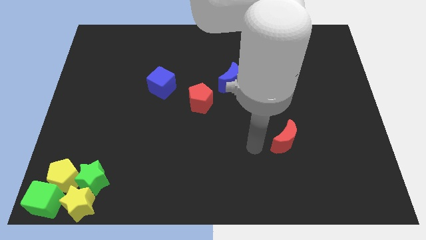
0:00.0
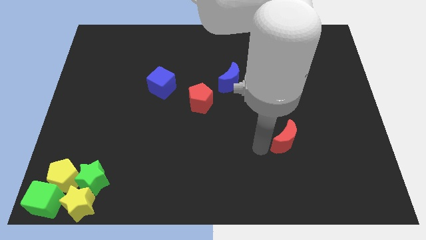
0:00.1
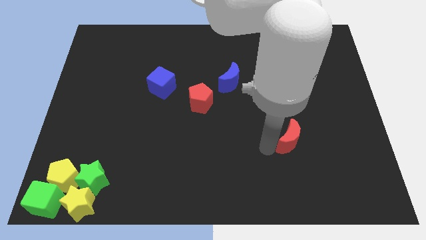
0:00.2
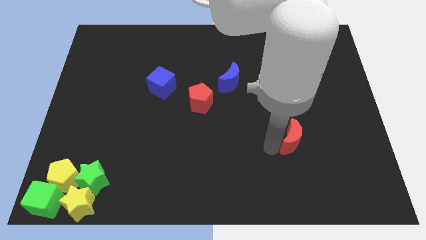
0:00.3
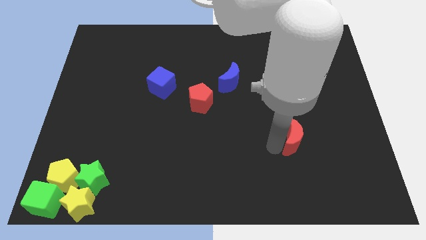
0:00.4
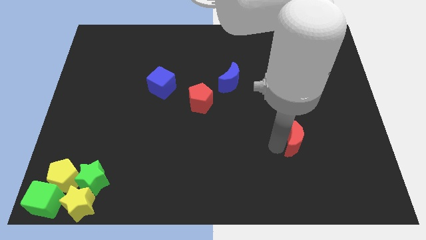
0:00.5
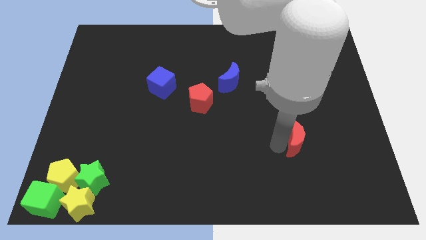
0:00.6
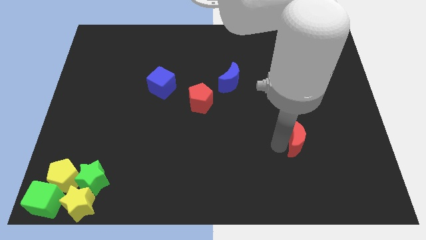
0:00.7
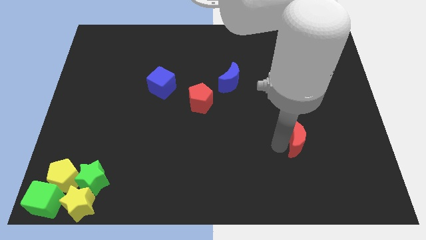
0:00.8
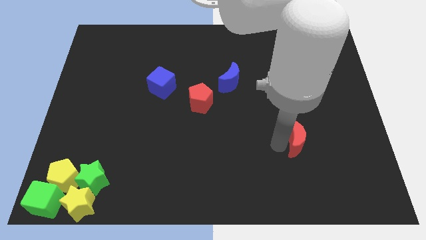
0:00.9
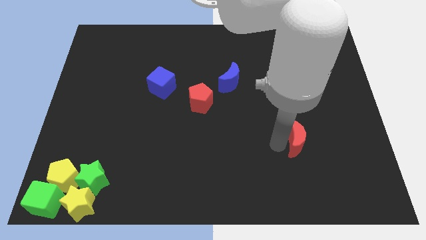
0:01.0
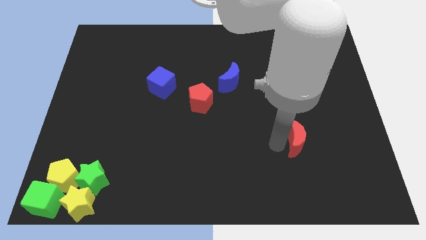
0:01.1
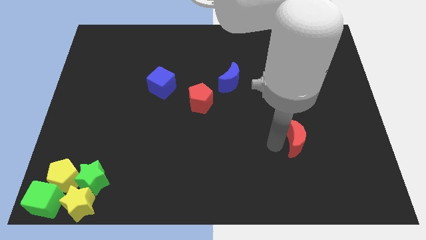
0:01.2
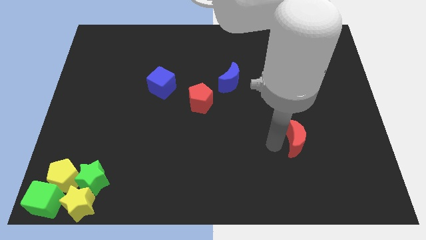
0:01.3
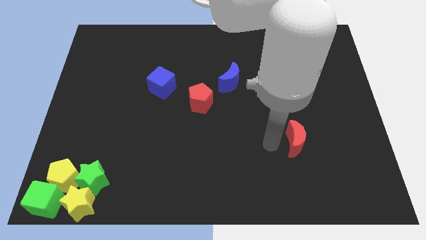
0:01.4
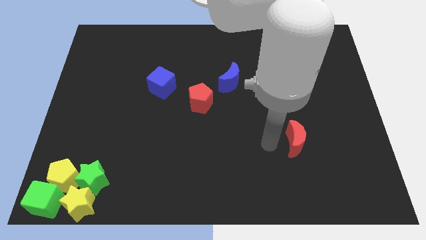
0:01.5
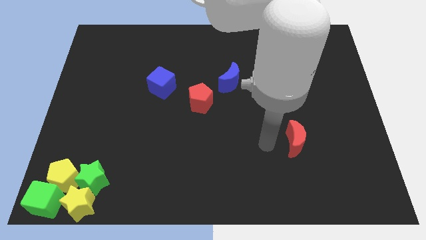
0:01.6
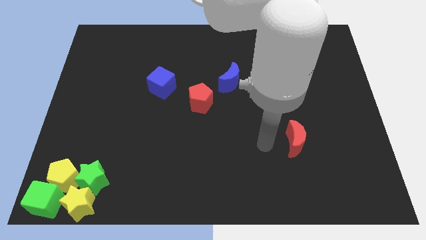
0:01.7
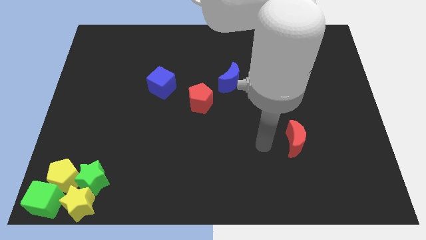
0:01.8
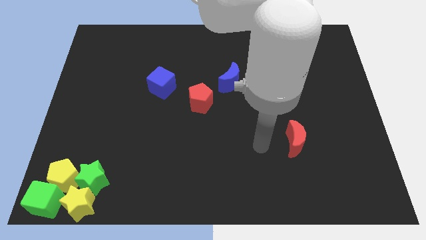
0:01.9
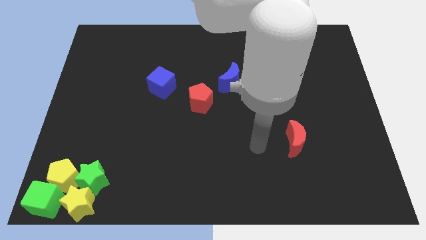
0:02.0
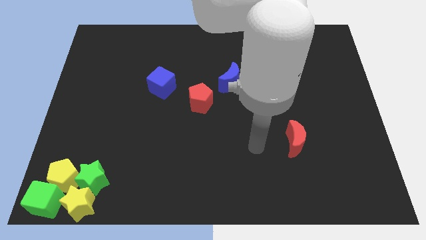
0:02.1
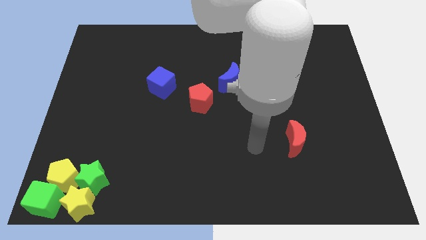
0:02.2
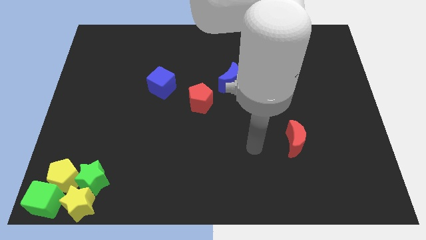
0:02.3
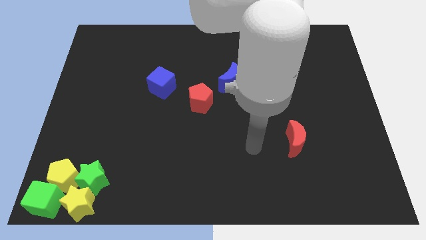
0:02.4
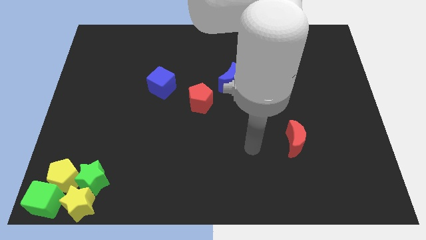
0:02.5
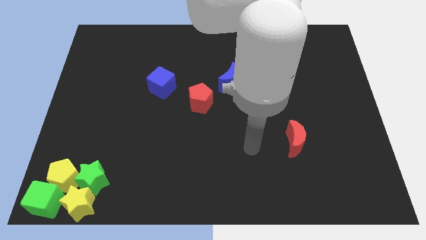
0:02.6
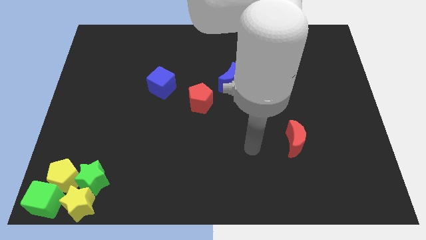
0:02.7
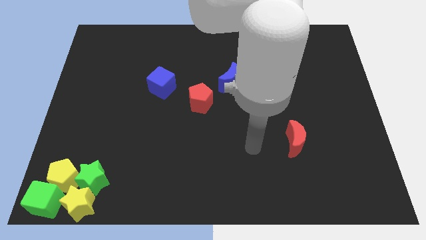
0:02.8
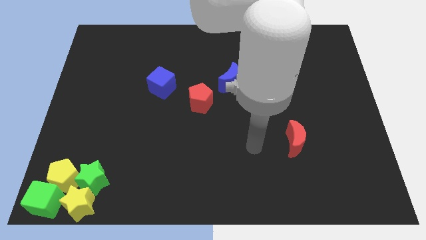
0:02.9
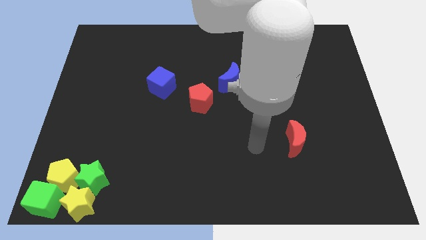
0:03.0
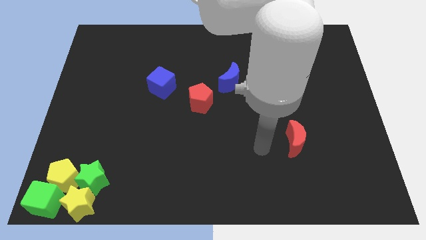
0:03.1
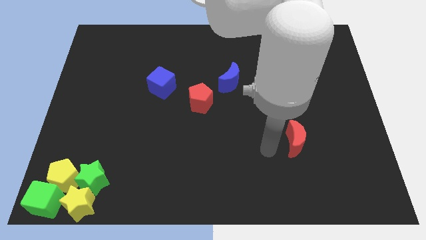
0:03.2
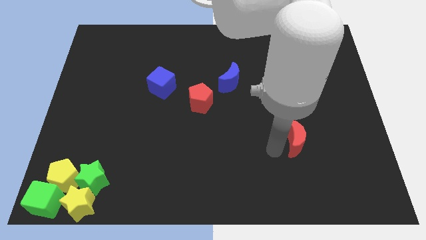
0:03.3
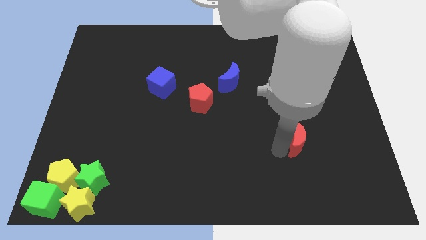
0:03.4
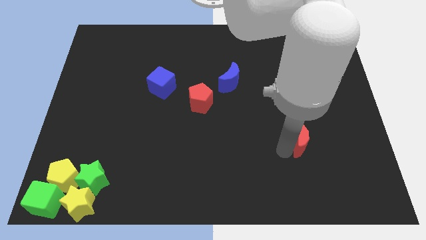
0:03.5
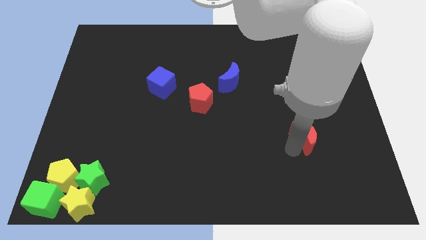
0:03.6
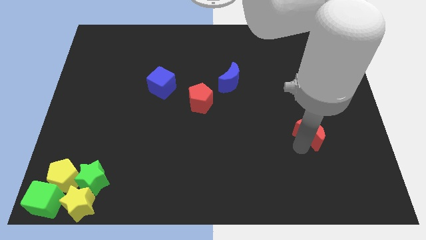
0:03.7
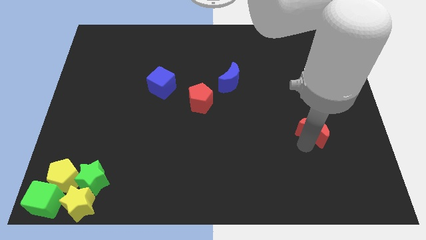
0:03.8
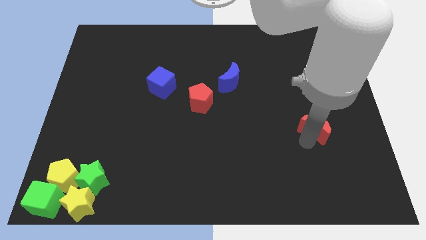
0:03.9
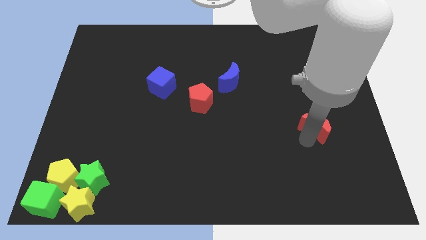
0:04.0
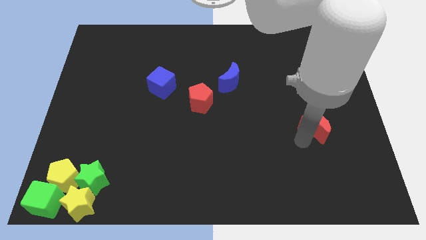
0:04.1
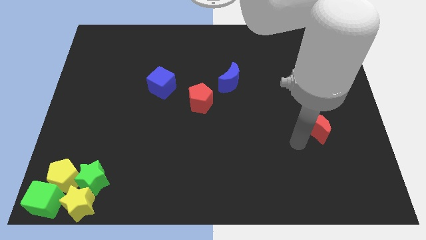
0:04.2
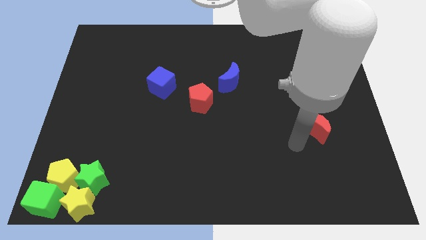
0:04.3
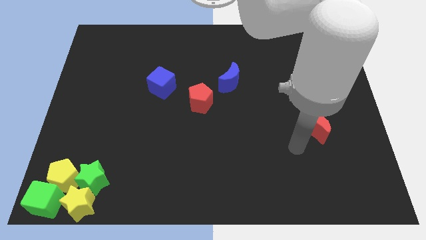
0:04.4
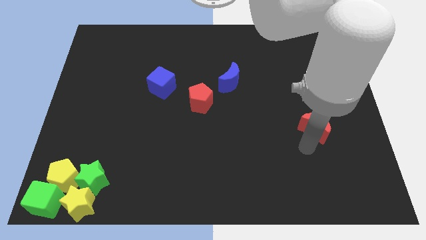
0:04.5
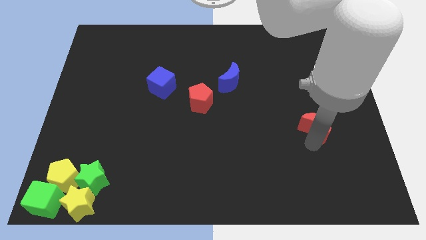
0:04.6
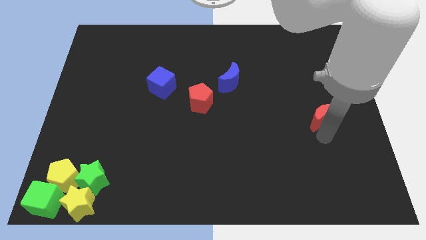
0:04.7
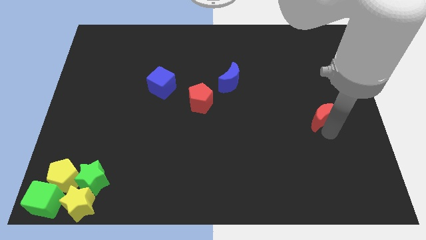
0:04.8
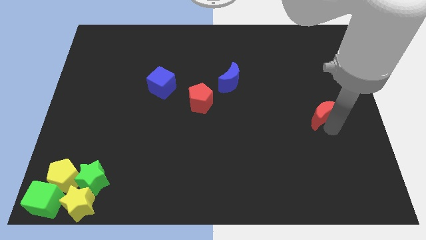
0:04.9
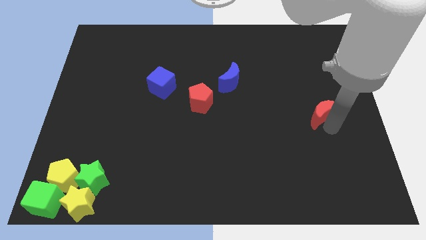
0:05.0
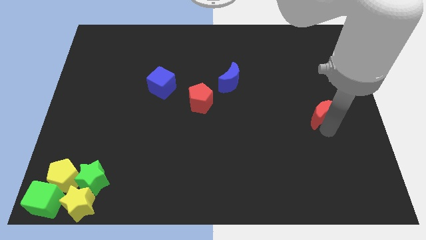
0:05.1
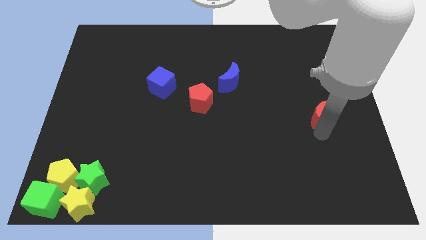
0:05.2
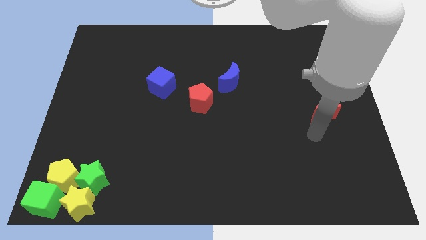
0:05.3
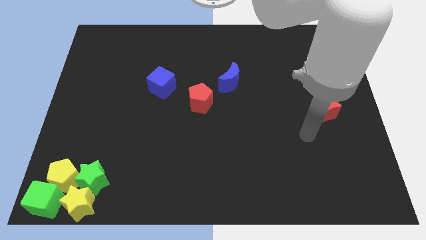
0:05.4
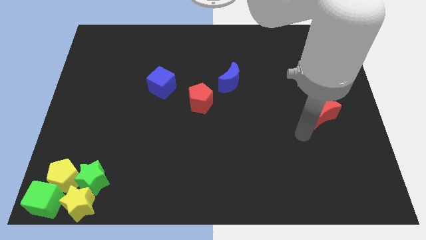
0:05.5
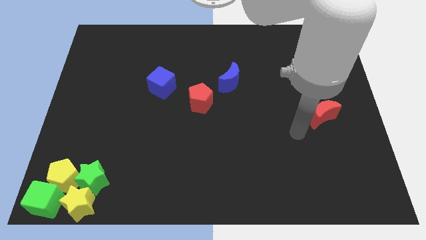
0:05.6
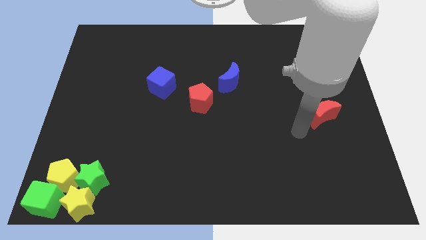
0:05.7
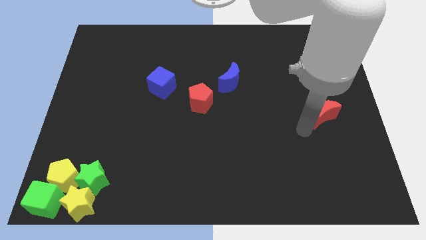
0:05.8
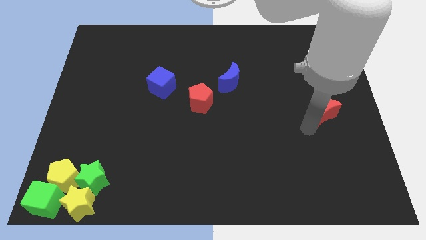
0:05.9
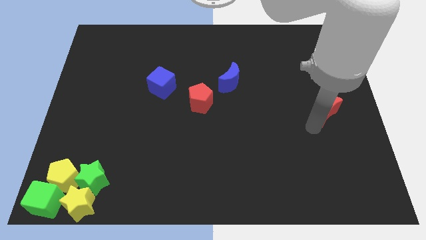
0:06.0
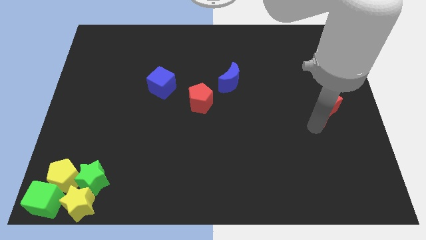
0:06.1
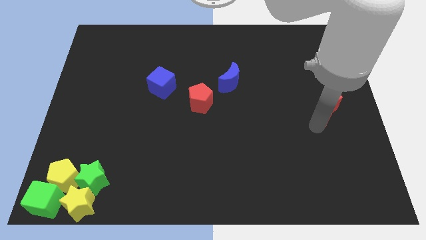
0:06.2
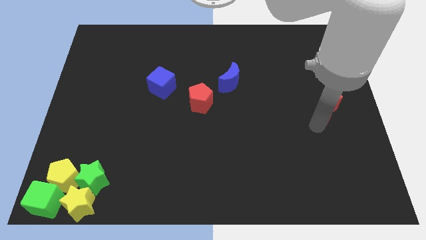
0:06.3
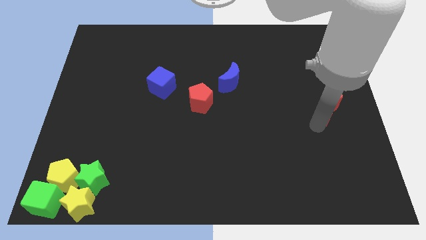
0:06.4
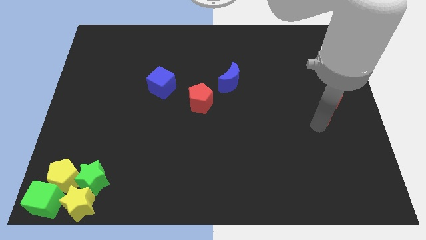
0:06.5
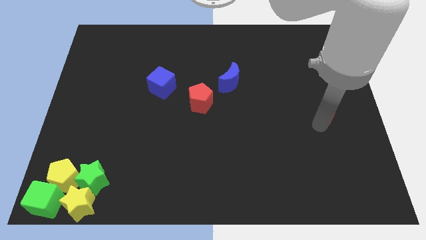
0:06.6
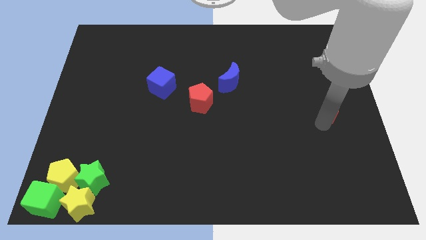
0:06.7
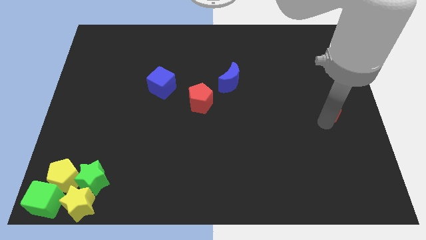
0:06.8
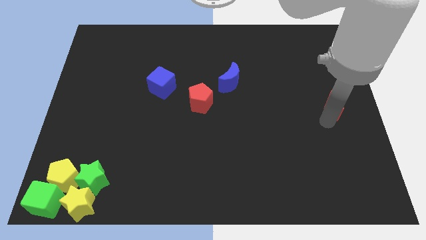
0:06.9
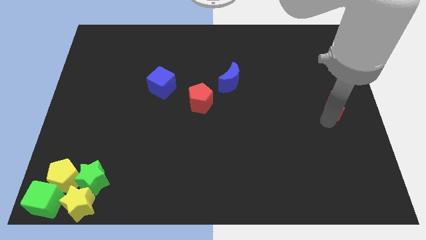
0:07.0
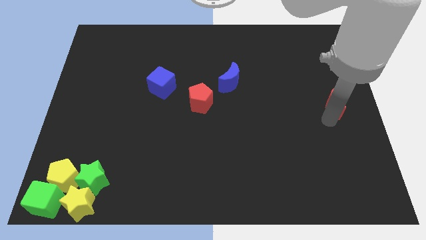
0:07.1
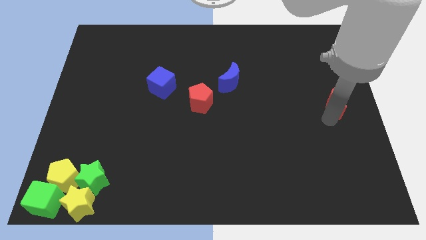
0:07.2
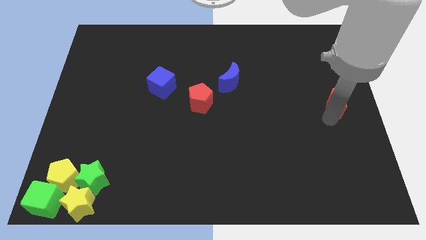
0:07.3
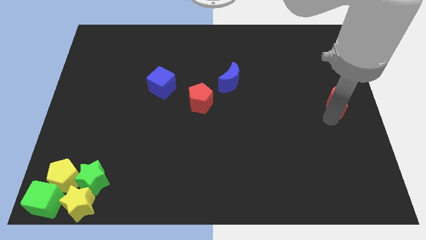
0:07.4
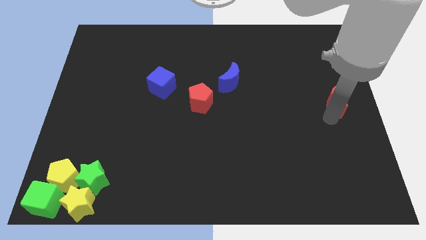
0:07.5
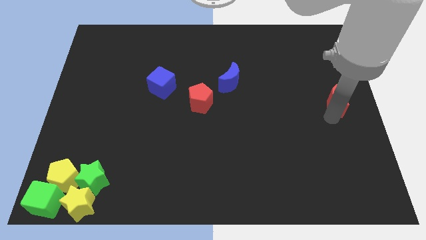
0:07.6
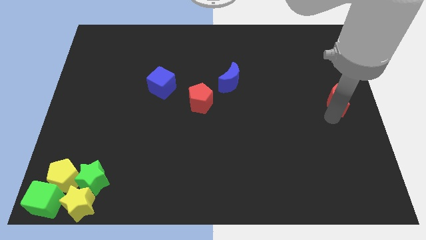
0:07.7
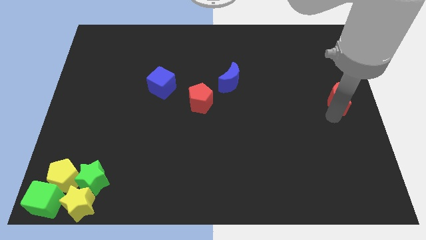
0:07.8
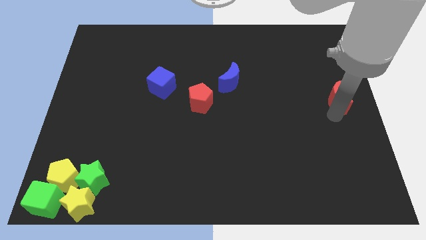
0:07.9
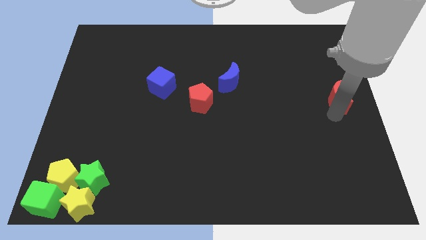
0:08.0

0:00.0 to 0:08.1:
slide red moon towards center right

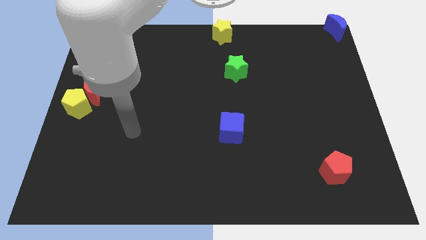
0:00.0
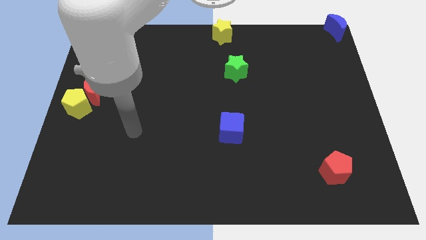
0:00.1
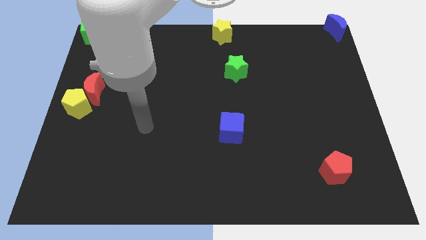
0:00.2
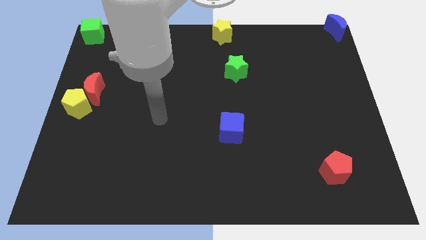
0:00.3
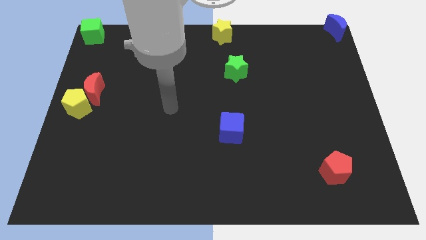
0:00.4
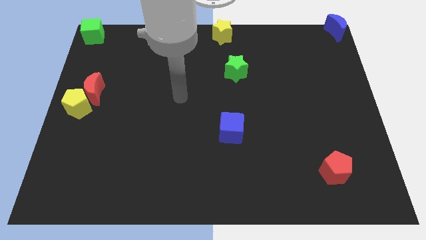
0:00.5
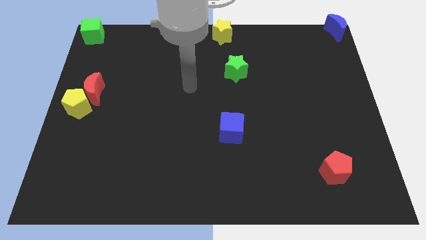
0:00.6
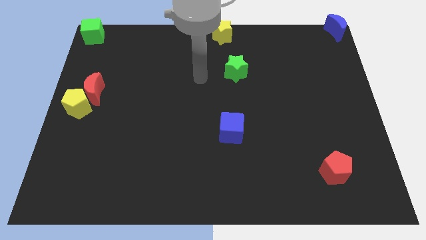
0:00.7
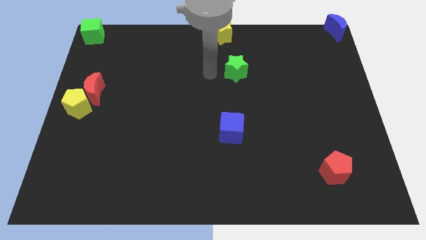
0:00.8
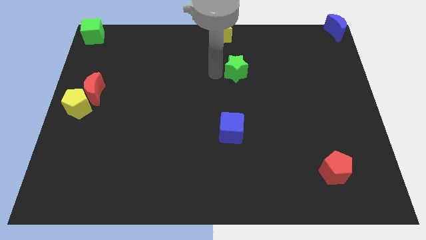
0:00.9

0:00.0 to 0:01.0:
move your arm left to the green star
